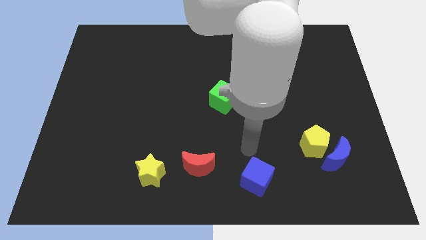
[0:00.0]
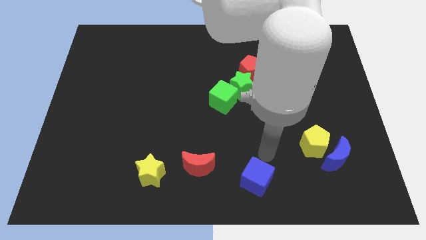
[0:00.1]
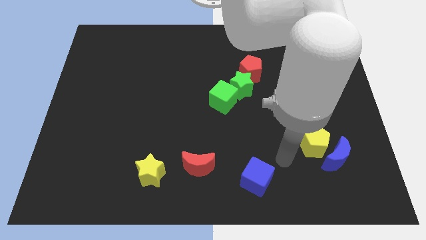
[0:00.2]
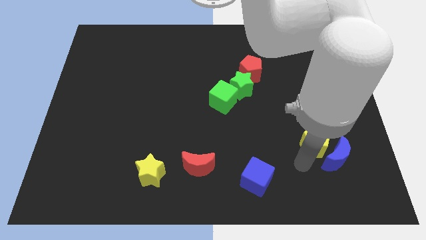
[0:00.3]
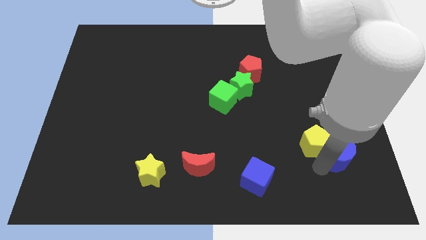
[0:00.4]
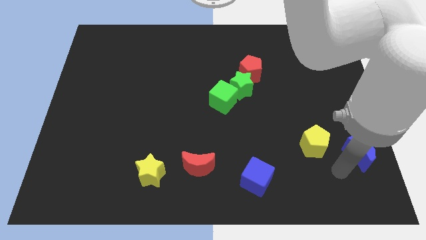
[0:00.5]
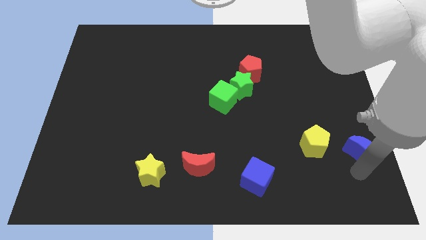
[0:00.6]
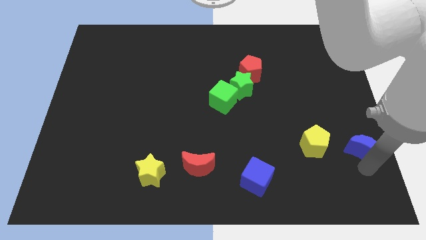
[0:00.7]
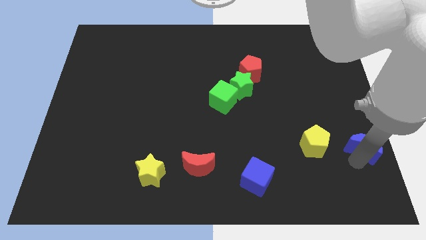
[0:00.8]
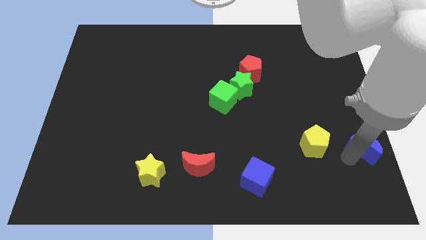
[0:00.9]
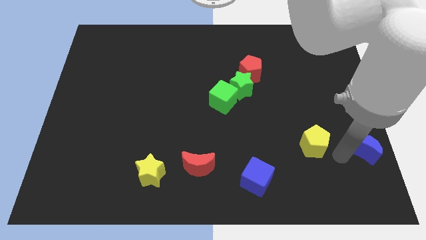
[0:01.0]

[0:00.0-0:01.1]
push the blue crescent slightly to the right

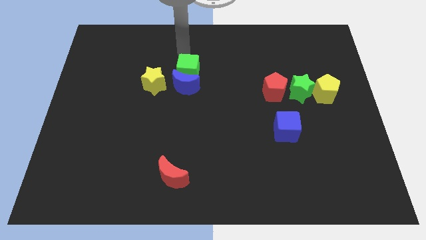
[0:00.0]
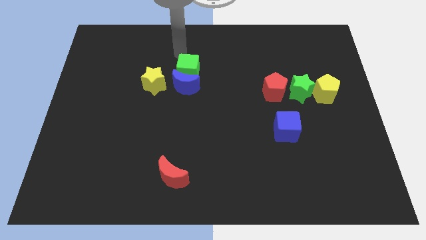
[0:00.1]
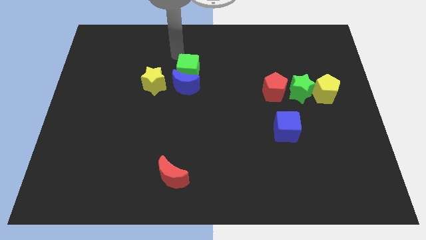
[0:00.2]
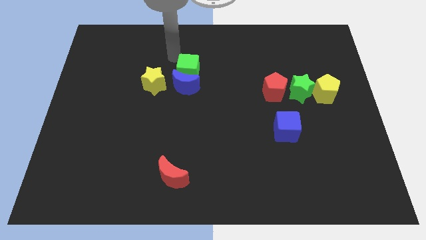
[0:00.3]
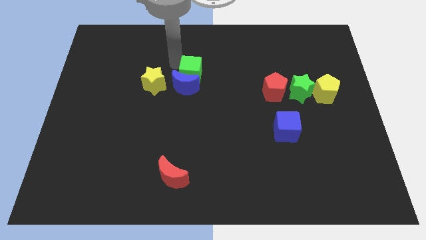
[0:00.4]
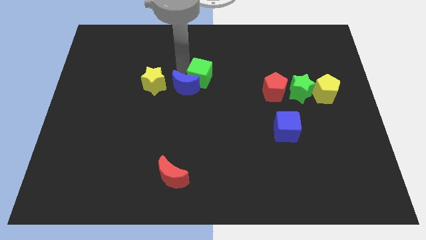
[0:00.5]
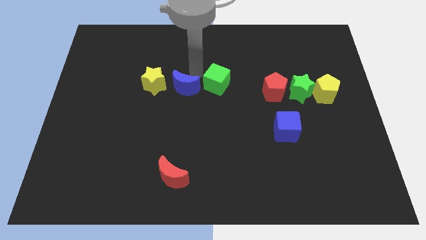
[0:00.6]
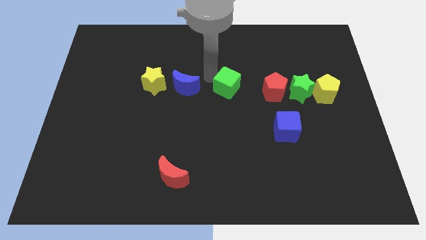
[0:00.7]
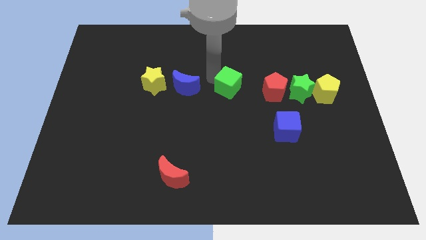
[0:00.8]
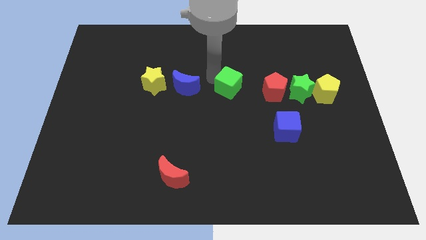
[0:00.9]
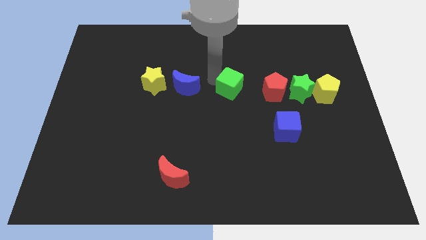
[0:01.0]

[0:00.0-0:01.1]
separate green cube from blue moon

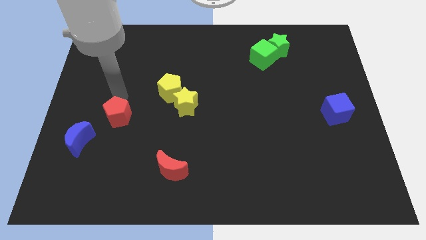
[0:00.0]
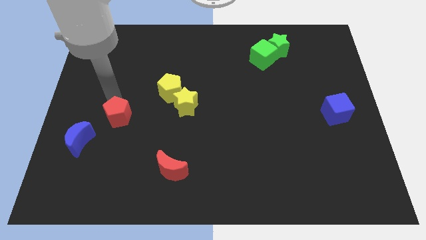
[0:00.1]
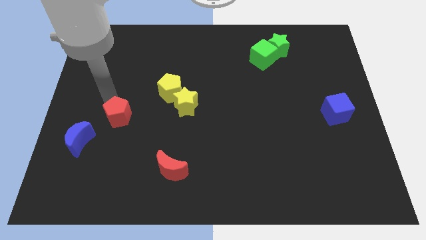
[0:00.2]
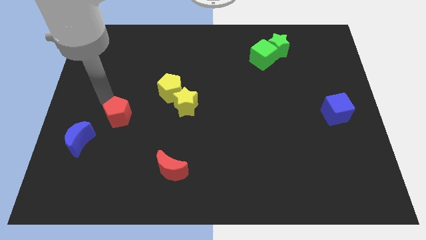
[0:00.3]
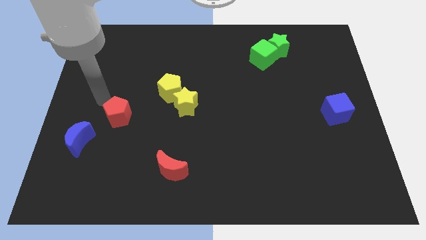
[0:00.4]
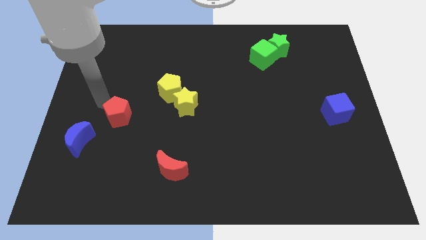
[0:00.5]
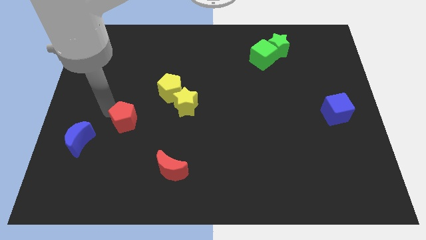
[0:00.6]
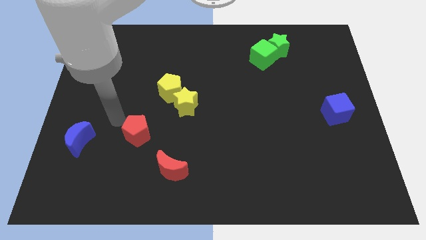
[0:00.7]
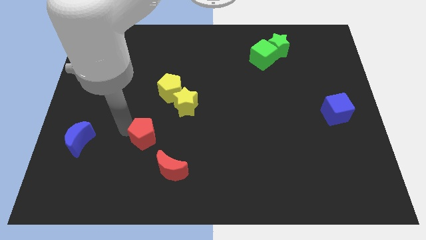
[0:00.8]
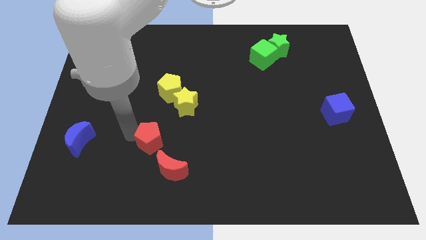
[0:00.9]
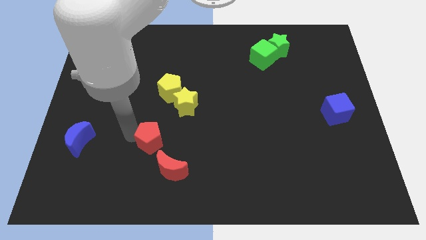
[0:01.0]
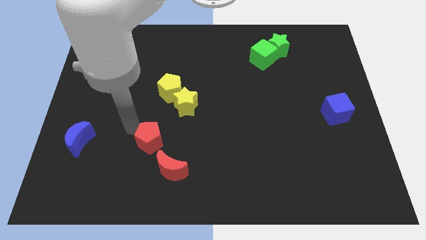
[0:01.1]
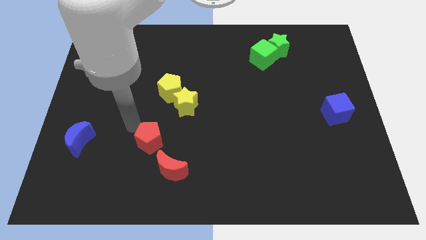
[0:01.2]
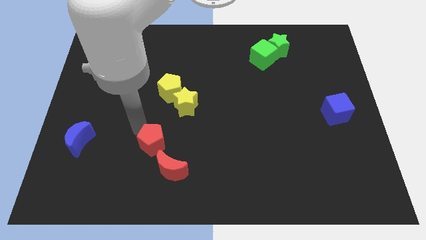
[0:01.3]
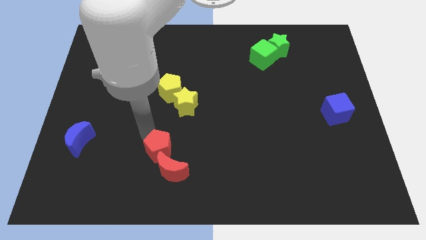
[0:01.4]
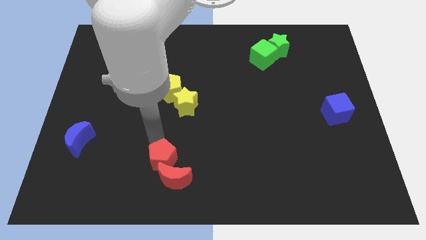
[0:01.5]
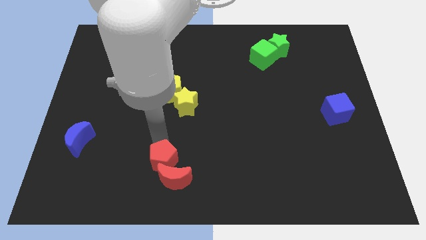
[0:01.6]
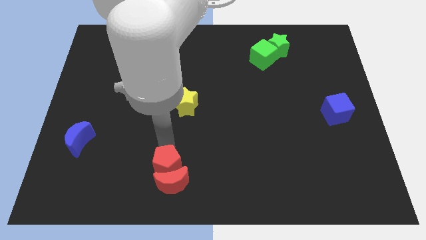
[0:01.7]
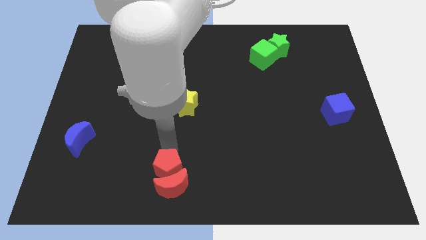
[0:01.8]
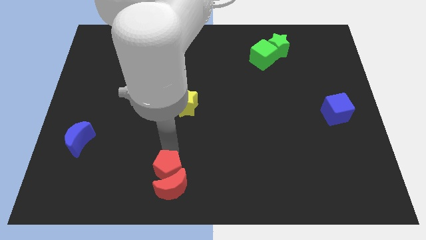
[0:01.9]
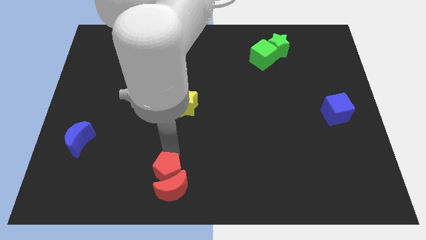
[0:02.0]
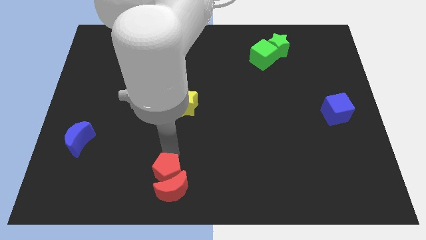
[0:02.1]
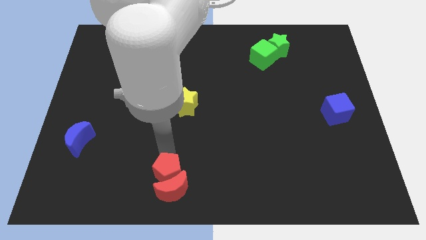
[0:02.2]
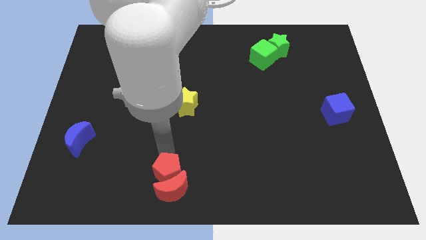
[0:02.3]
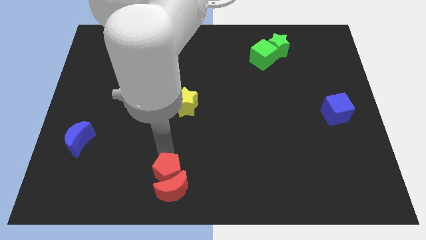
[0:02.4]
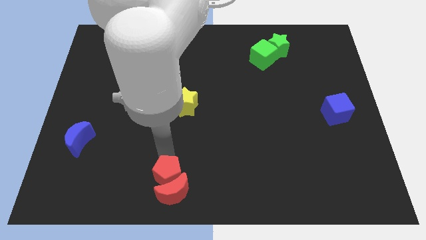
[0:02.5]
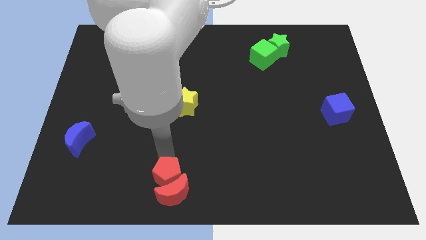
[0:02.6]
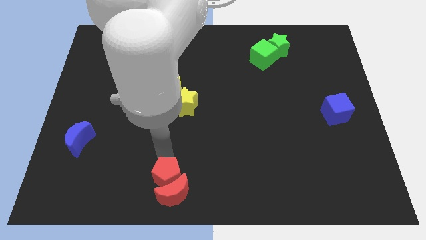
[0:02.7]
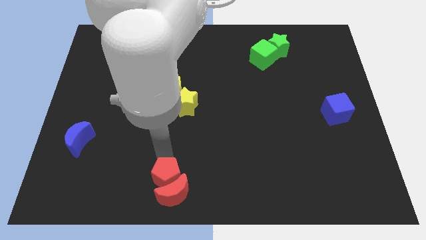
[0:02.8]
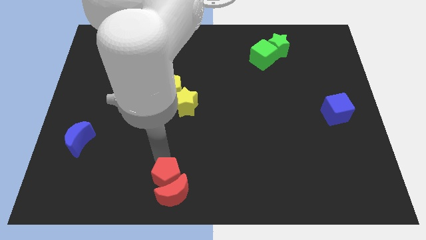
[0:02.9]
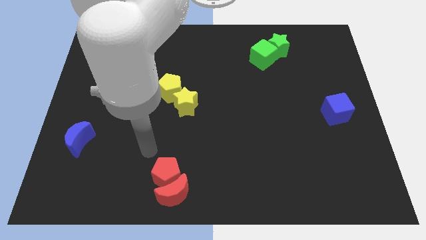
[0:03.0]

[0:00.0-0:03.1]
push the red pentagon into the red moon

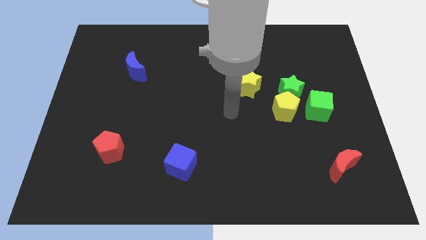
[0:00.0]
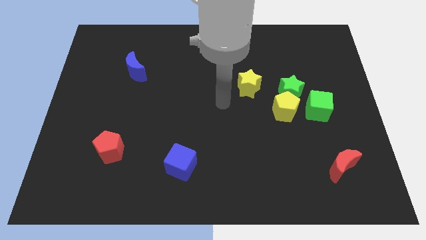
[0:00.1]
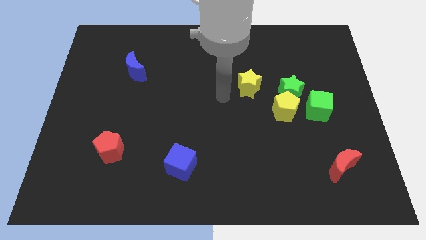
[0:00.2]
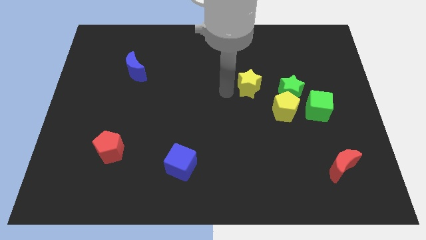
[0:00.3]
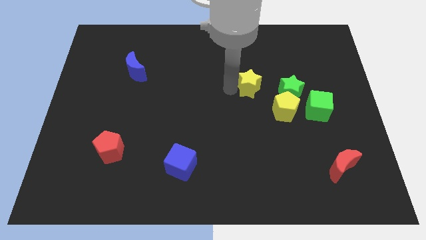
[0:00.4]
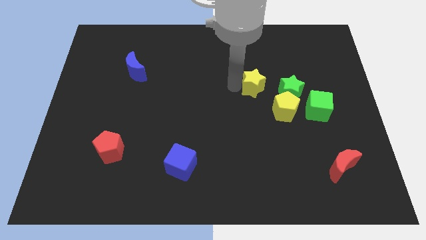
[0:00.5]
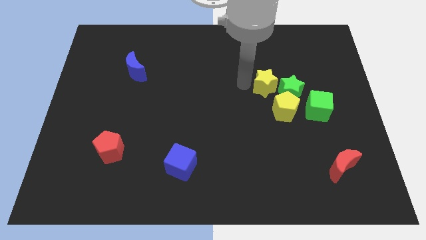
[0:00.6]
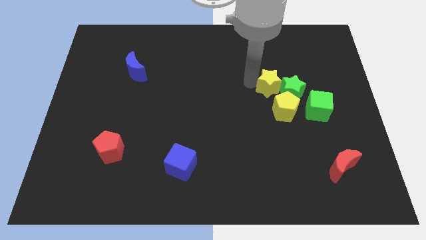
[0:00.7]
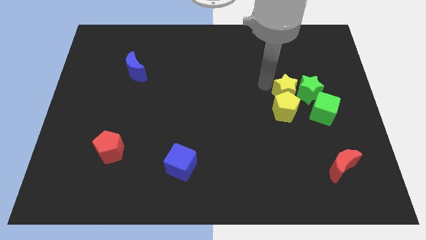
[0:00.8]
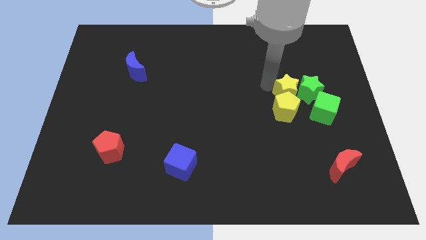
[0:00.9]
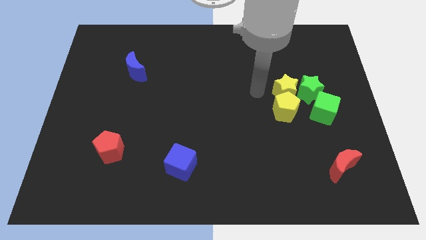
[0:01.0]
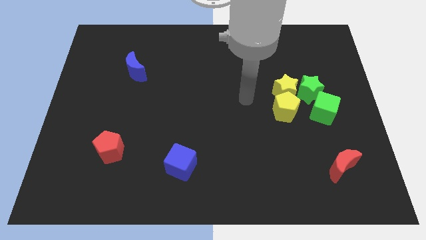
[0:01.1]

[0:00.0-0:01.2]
push the yellow star into the green star

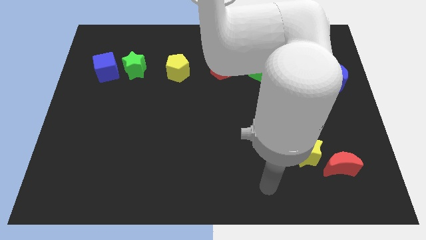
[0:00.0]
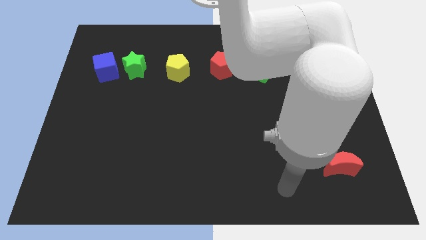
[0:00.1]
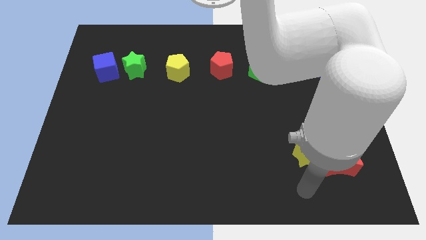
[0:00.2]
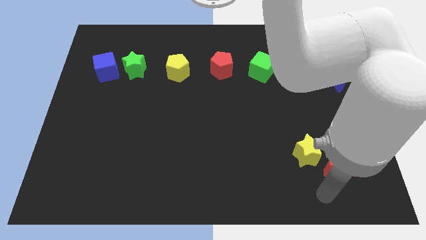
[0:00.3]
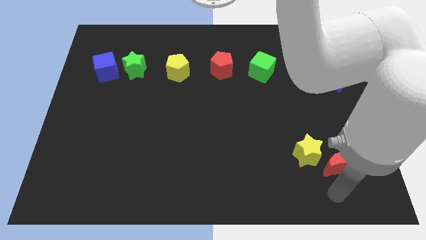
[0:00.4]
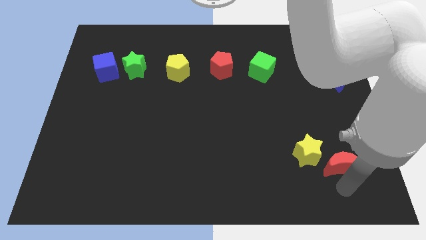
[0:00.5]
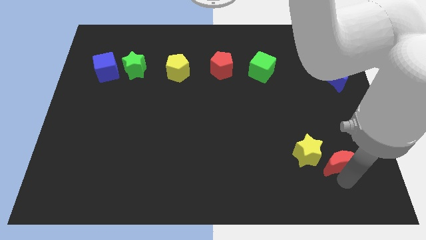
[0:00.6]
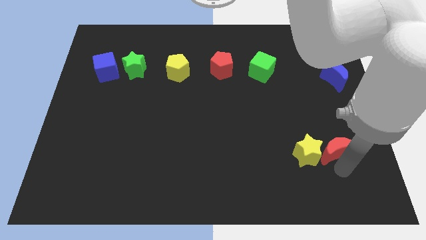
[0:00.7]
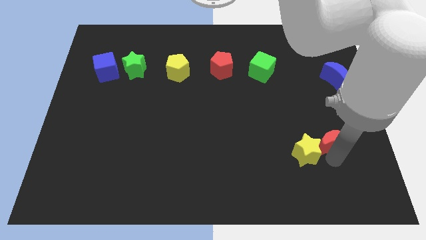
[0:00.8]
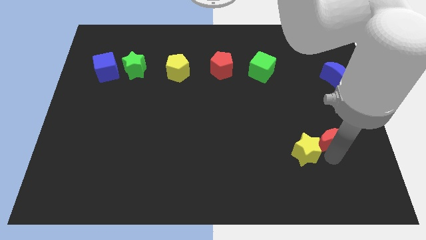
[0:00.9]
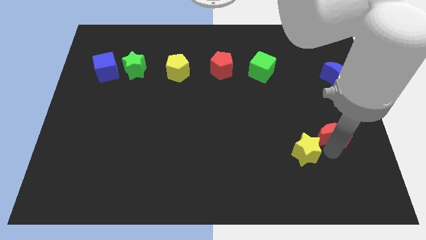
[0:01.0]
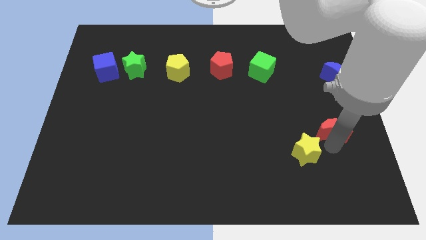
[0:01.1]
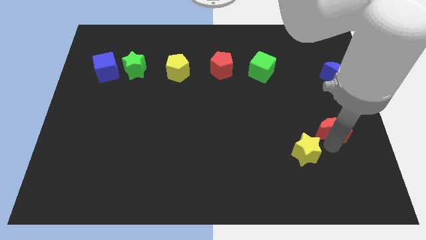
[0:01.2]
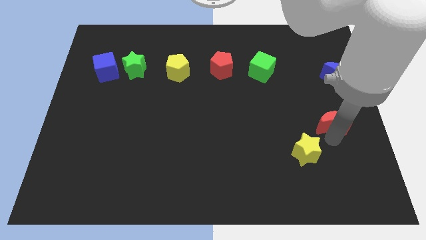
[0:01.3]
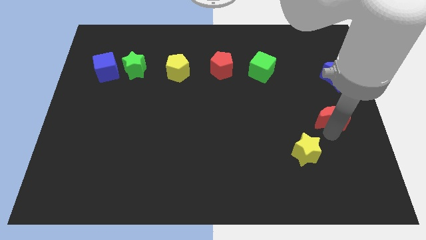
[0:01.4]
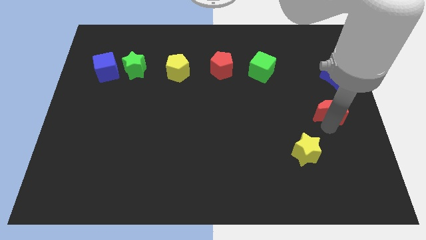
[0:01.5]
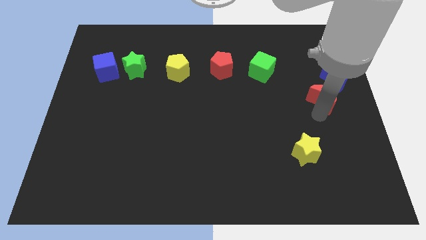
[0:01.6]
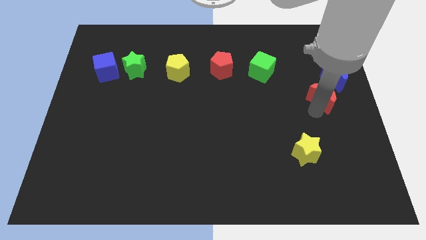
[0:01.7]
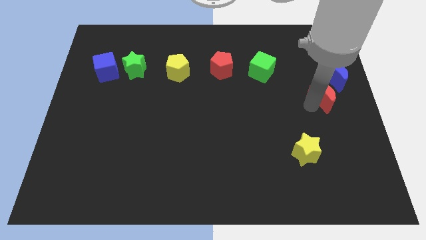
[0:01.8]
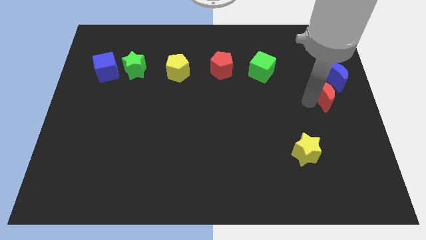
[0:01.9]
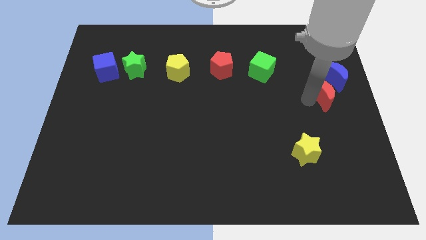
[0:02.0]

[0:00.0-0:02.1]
place the red crescent towards the blue crescent

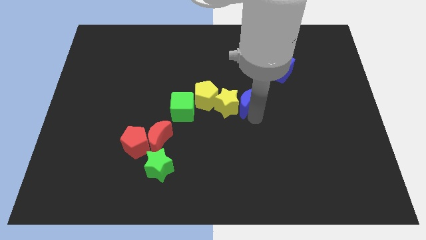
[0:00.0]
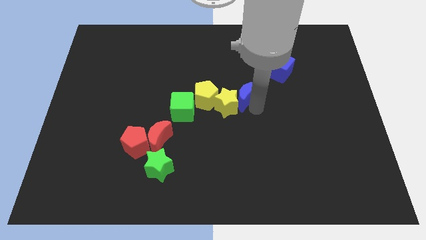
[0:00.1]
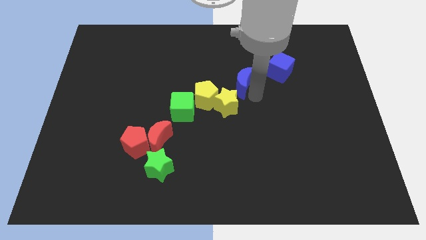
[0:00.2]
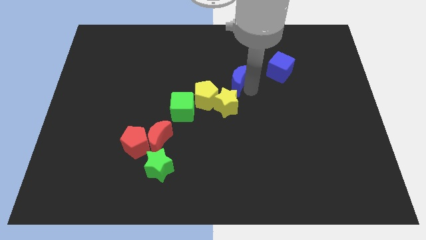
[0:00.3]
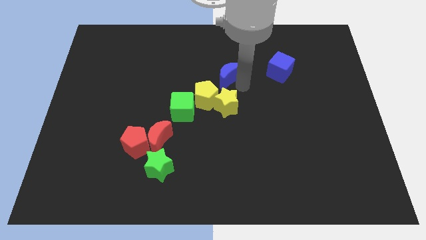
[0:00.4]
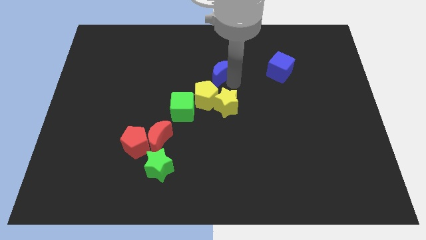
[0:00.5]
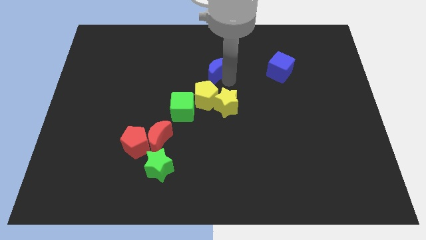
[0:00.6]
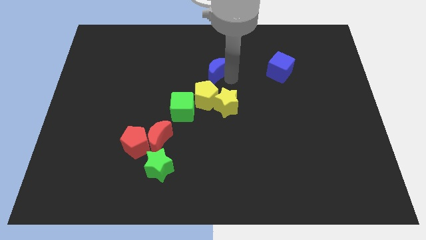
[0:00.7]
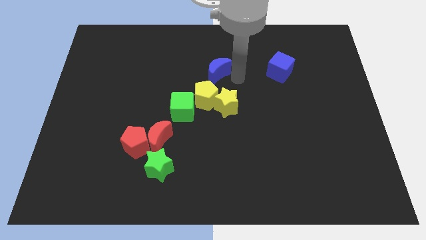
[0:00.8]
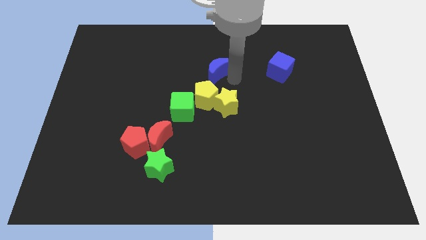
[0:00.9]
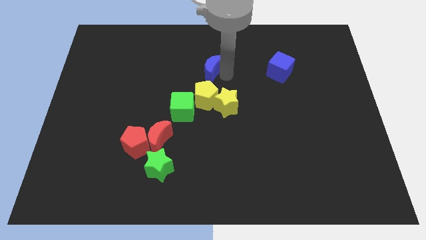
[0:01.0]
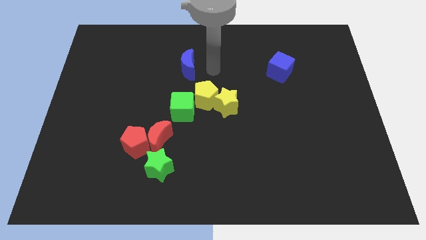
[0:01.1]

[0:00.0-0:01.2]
move the blue crescent to the top of the yellow pentagon
